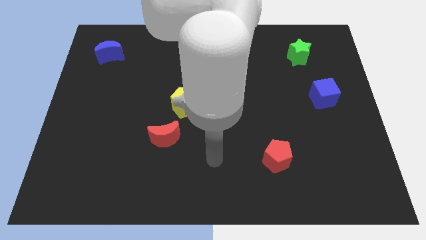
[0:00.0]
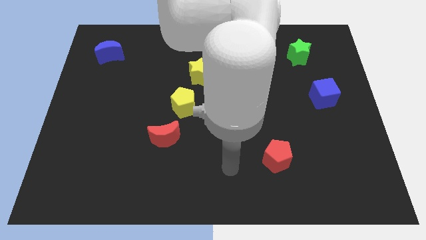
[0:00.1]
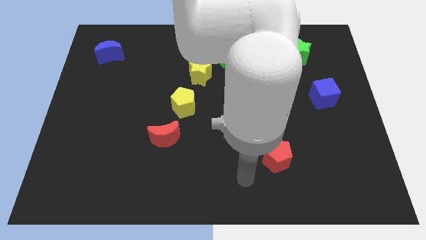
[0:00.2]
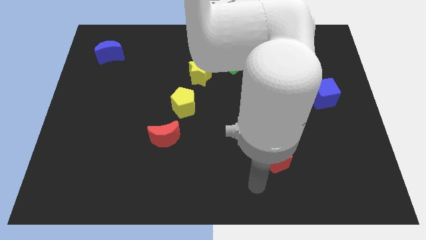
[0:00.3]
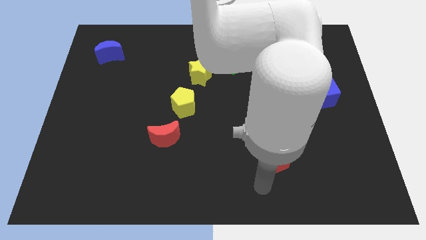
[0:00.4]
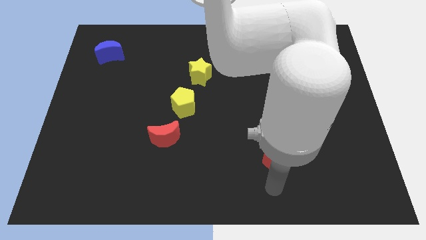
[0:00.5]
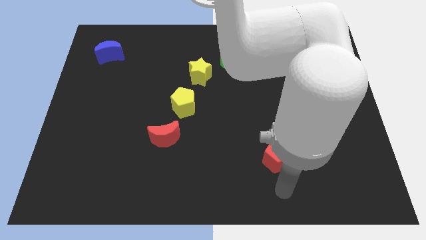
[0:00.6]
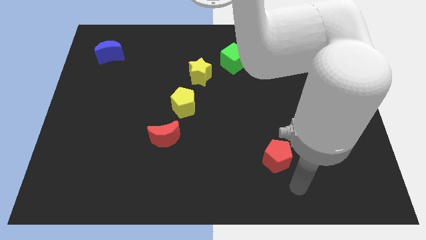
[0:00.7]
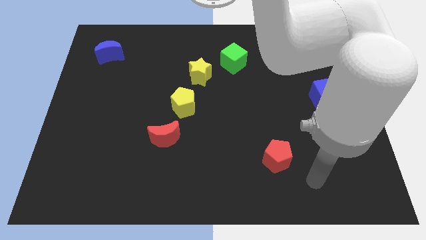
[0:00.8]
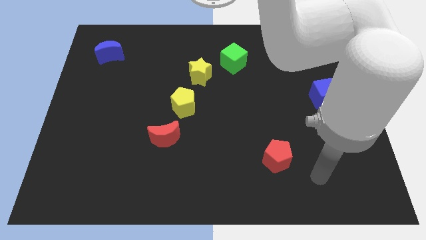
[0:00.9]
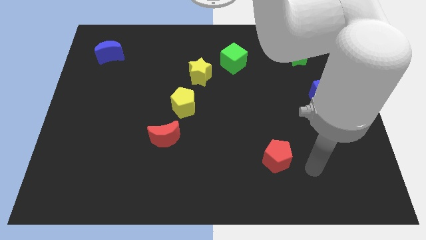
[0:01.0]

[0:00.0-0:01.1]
move your arm to the bottom right of red pentagon

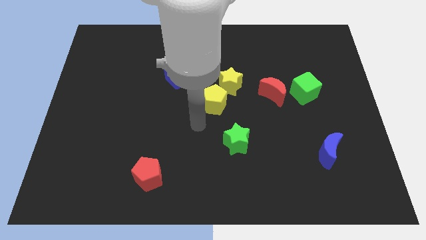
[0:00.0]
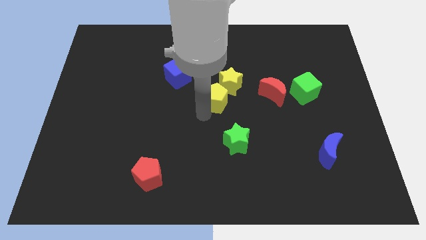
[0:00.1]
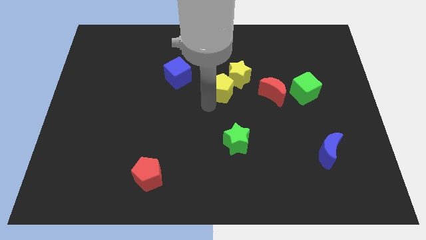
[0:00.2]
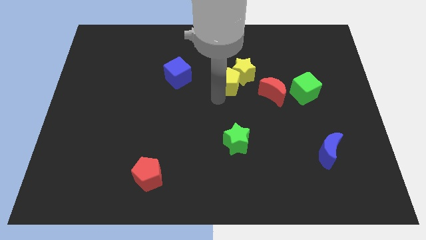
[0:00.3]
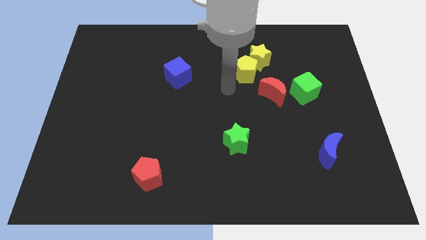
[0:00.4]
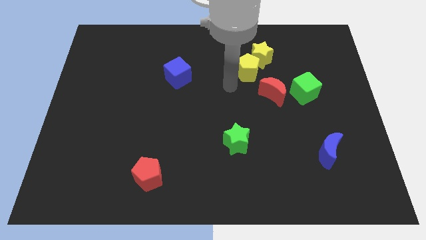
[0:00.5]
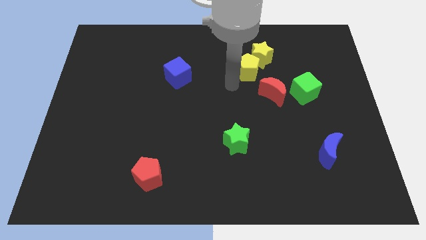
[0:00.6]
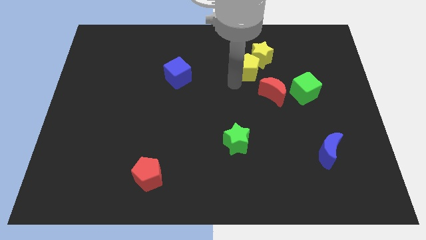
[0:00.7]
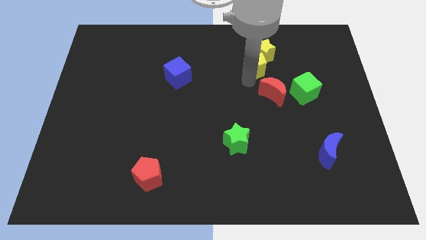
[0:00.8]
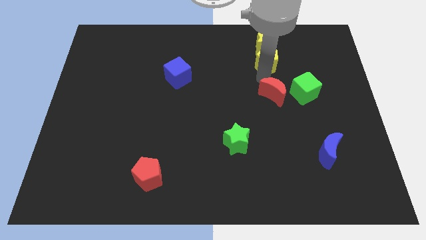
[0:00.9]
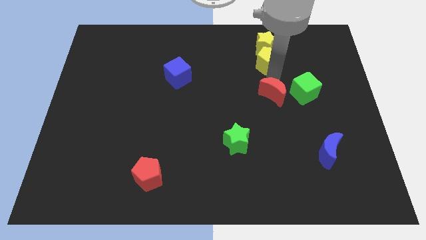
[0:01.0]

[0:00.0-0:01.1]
push yellow pentagon above red moon

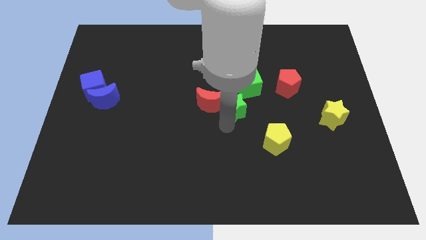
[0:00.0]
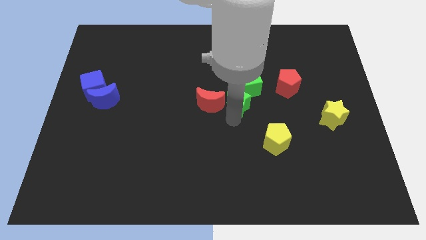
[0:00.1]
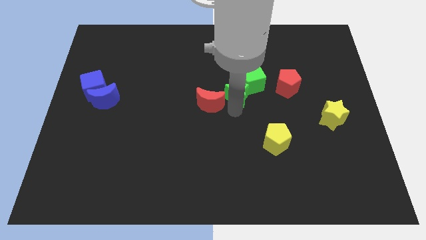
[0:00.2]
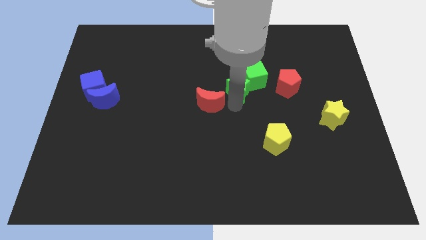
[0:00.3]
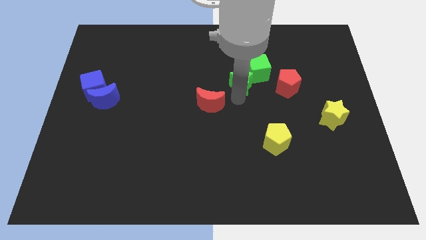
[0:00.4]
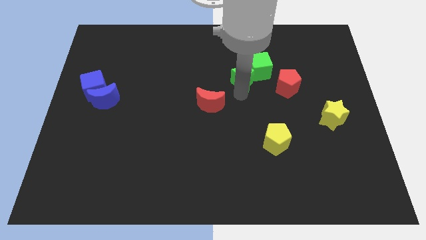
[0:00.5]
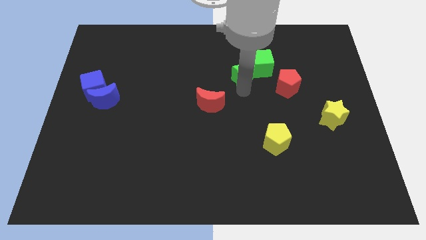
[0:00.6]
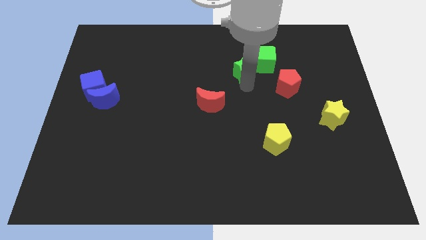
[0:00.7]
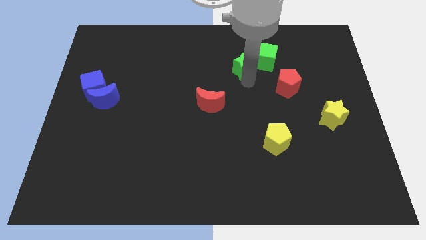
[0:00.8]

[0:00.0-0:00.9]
push the green star into the green cube

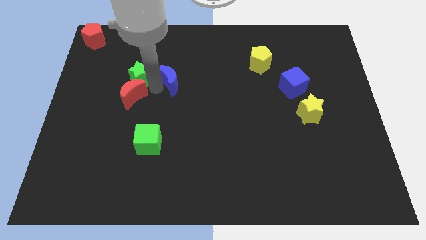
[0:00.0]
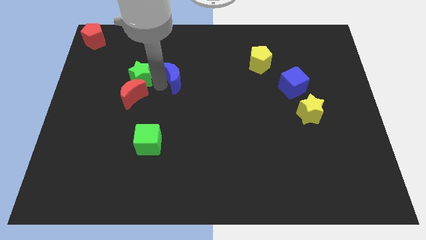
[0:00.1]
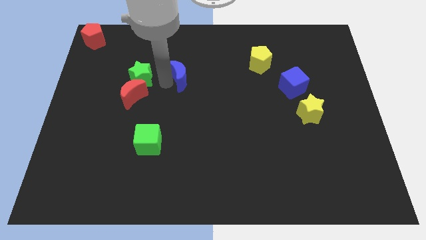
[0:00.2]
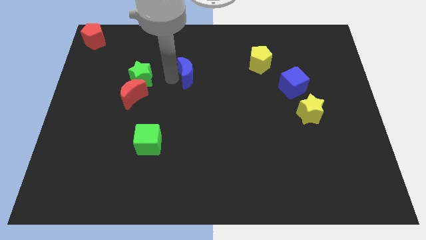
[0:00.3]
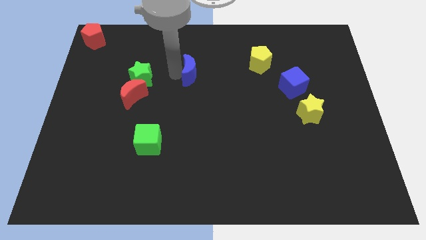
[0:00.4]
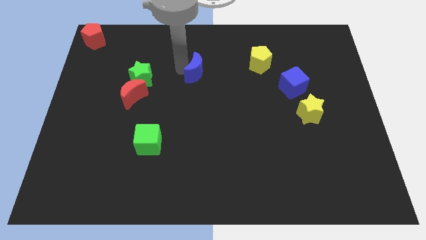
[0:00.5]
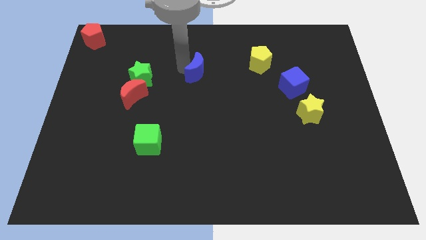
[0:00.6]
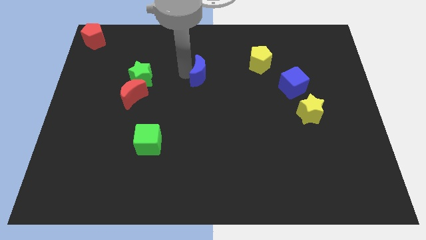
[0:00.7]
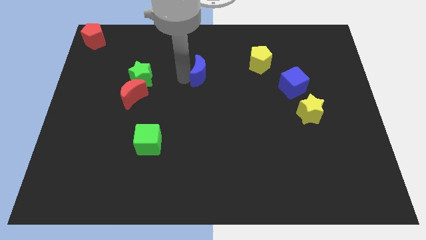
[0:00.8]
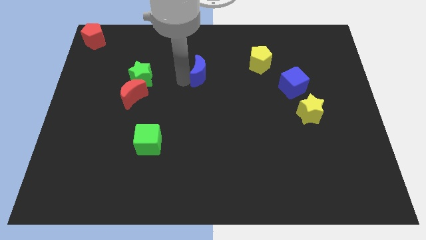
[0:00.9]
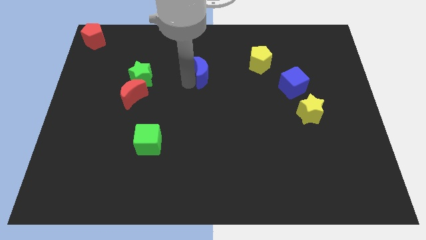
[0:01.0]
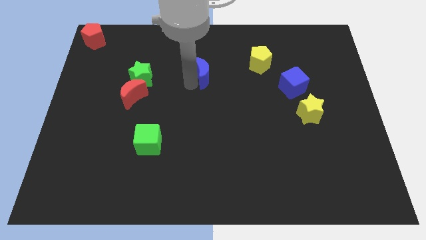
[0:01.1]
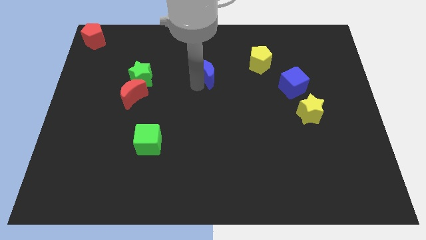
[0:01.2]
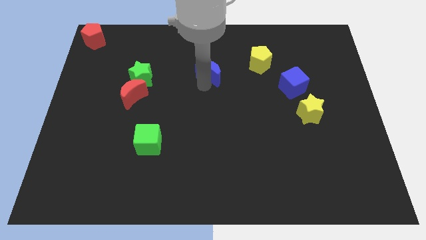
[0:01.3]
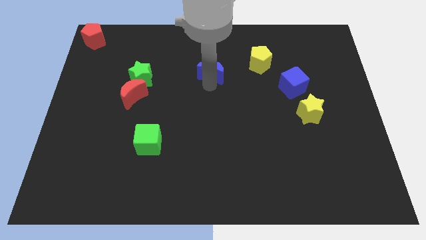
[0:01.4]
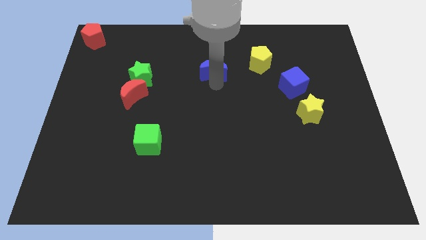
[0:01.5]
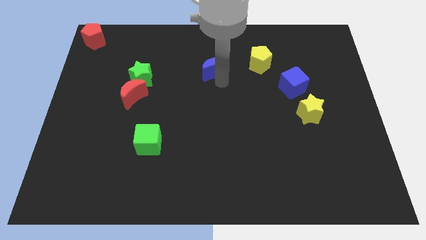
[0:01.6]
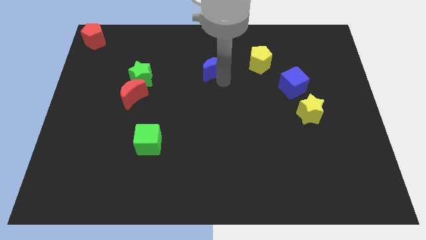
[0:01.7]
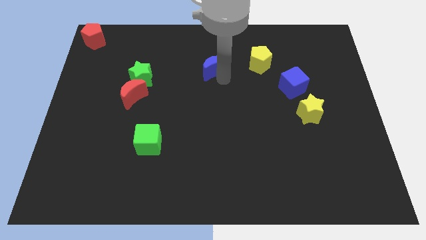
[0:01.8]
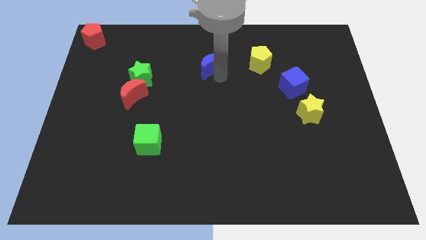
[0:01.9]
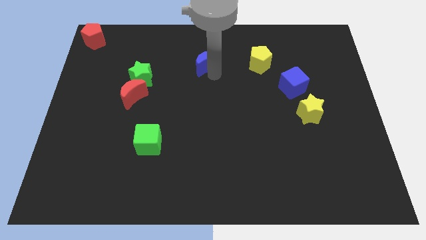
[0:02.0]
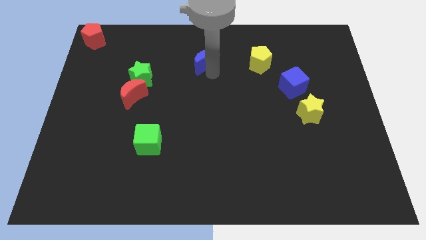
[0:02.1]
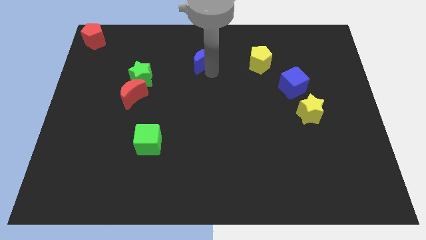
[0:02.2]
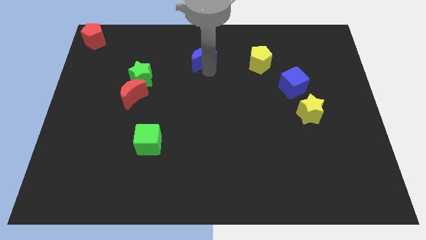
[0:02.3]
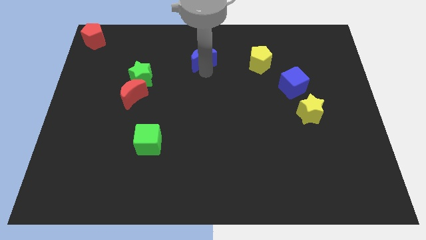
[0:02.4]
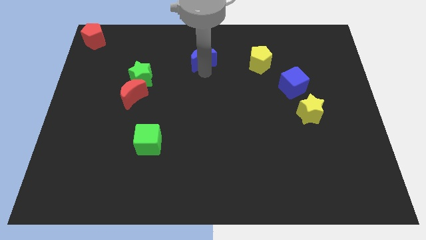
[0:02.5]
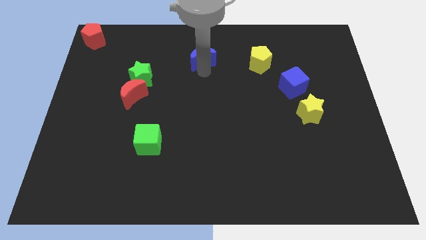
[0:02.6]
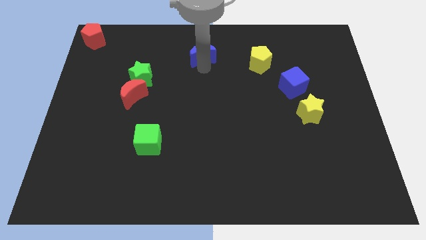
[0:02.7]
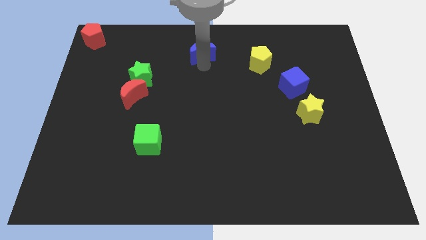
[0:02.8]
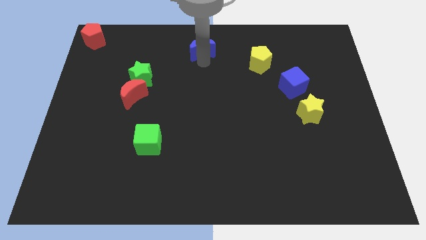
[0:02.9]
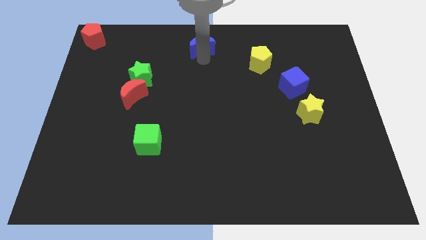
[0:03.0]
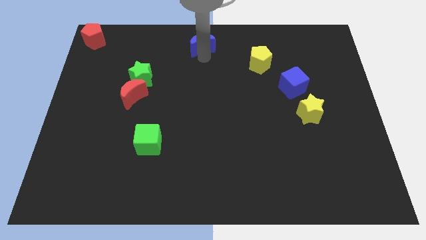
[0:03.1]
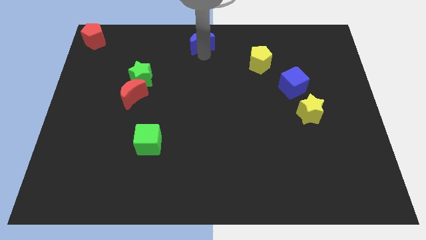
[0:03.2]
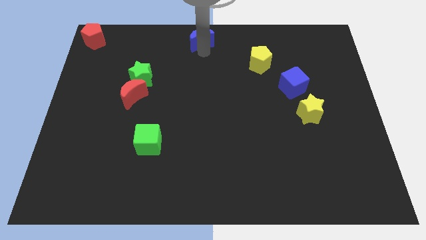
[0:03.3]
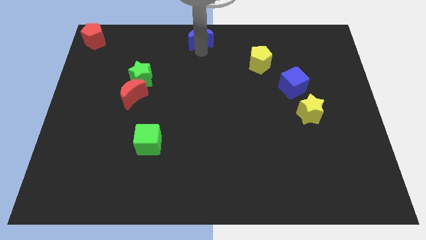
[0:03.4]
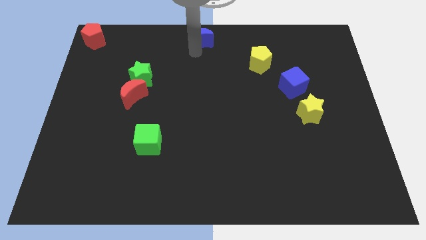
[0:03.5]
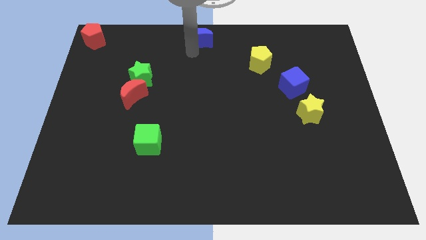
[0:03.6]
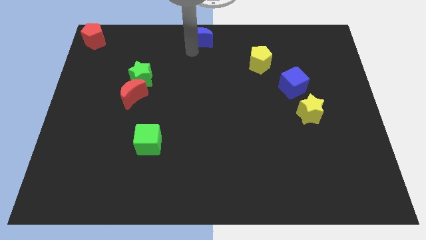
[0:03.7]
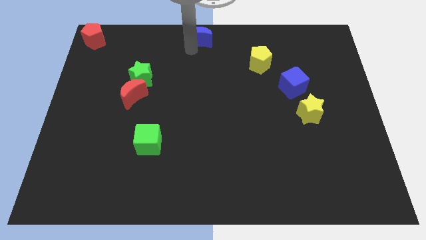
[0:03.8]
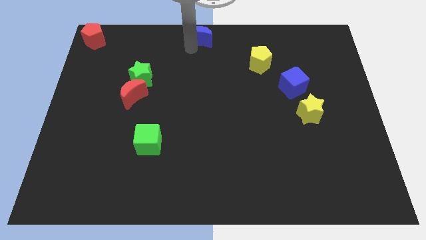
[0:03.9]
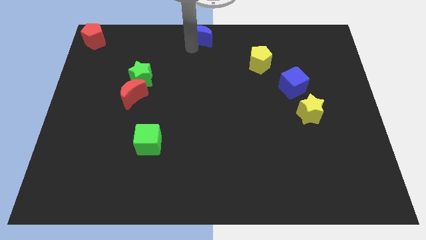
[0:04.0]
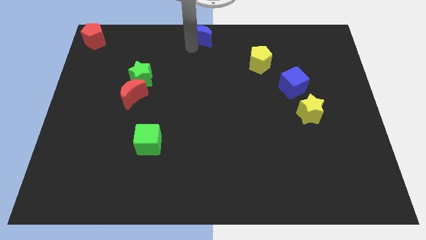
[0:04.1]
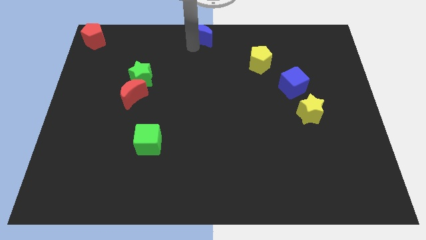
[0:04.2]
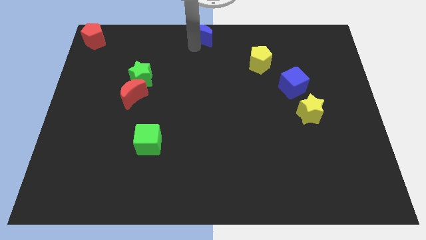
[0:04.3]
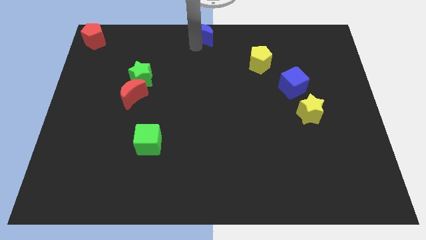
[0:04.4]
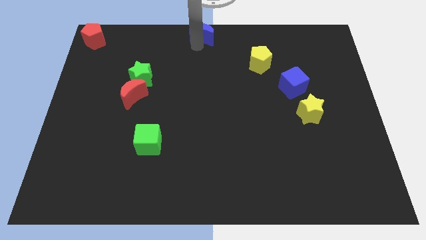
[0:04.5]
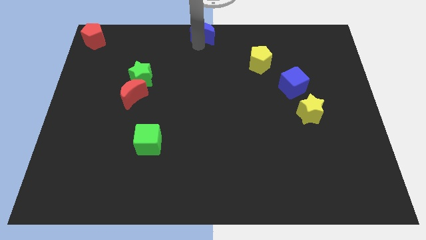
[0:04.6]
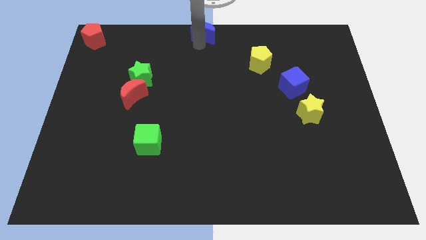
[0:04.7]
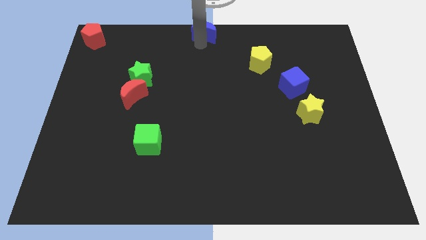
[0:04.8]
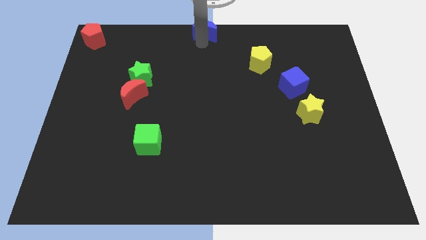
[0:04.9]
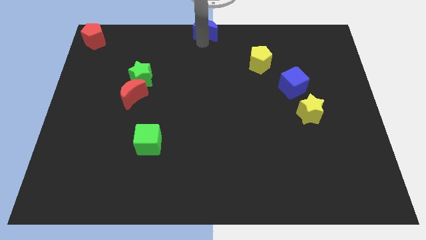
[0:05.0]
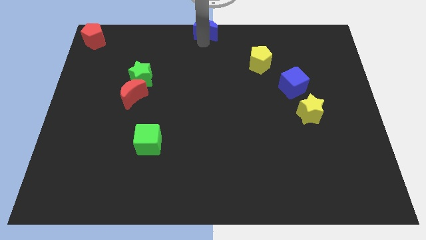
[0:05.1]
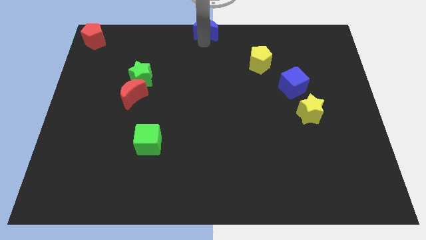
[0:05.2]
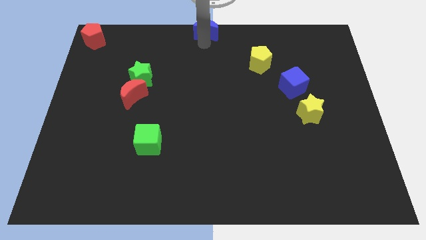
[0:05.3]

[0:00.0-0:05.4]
push the blue moon to the top center of the board

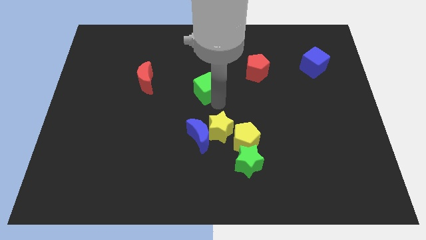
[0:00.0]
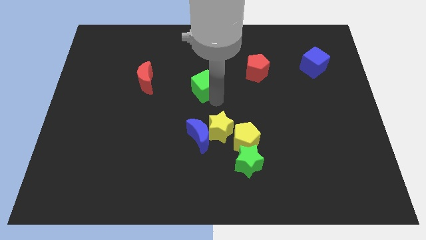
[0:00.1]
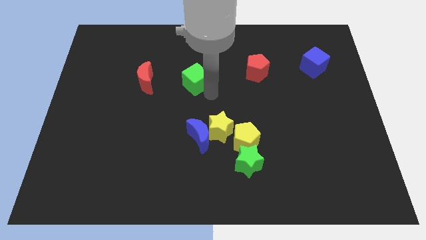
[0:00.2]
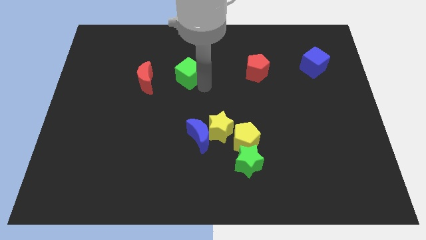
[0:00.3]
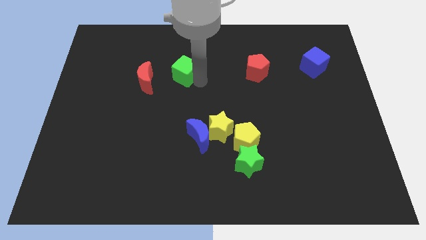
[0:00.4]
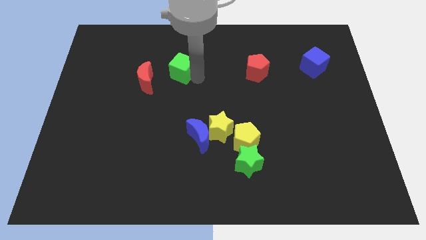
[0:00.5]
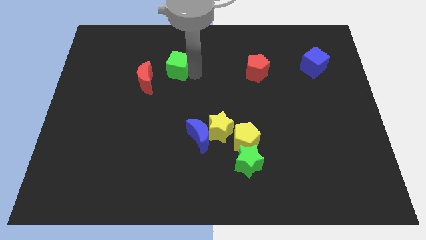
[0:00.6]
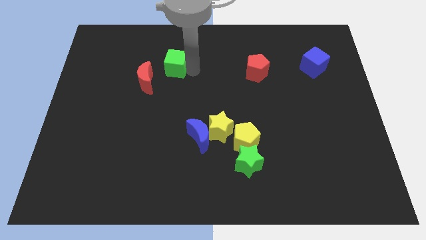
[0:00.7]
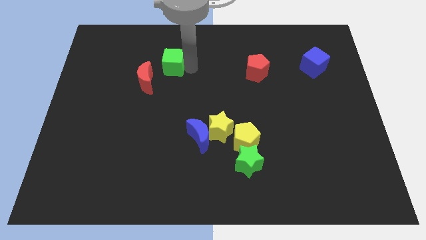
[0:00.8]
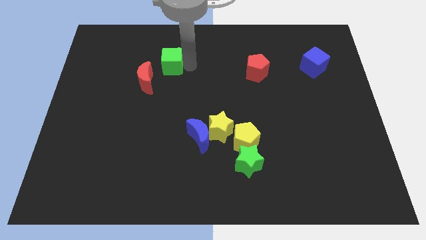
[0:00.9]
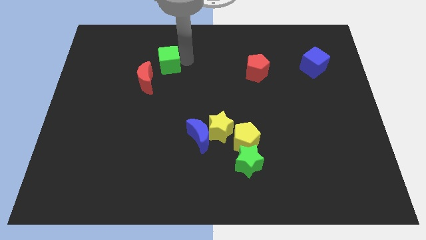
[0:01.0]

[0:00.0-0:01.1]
push the green cube to the top of the board
